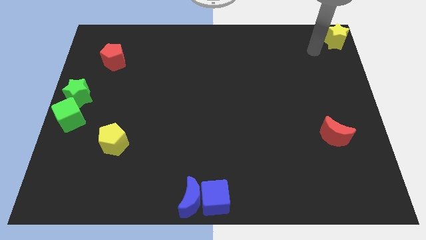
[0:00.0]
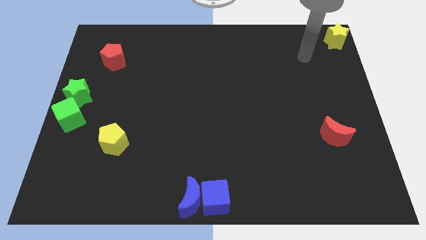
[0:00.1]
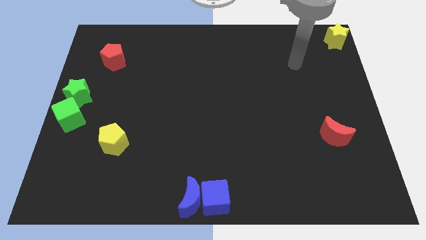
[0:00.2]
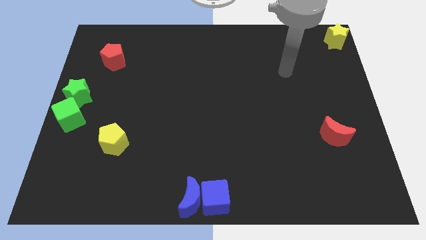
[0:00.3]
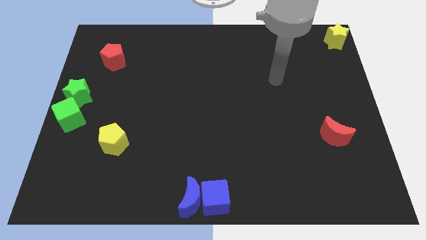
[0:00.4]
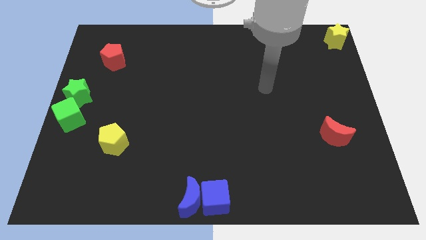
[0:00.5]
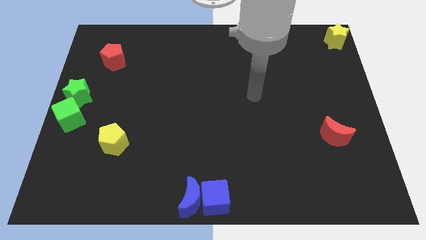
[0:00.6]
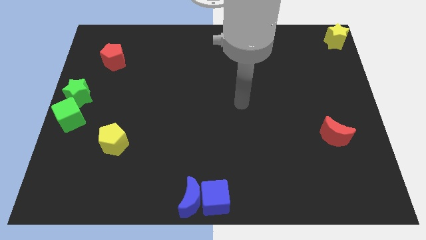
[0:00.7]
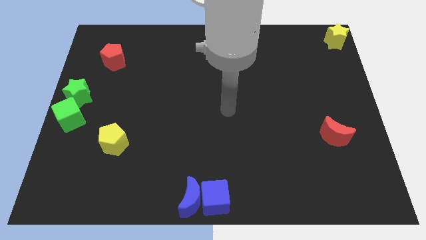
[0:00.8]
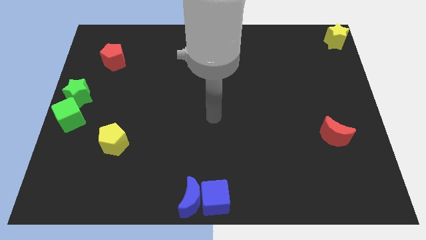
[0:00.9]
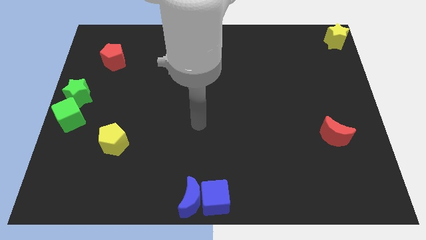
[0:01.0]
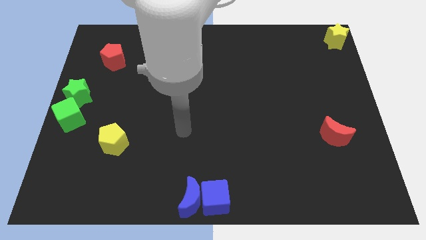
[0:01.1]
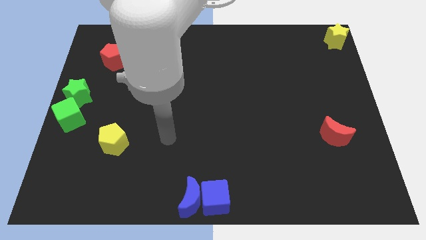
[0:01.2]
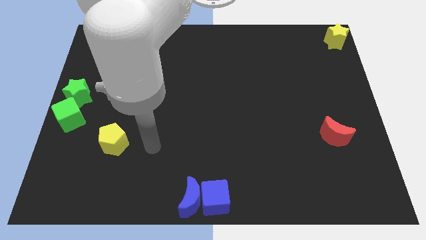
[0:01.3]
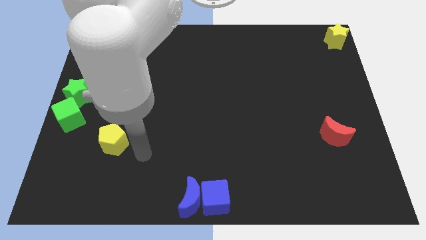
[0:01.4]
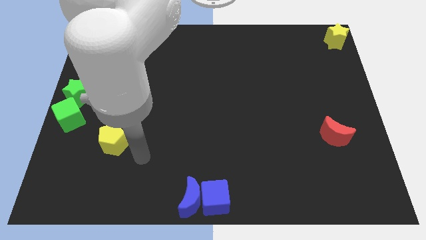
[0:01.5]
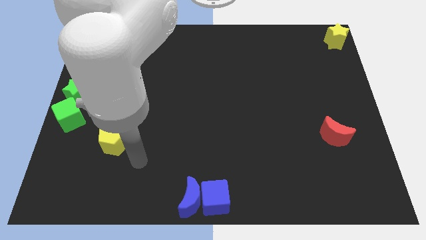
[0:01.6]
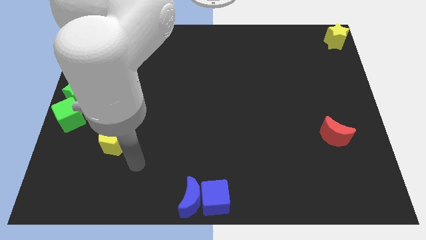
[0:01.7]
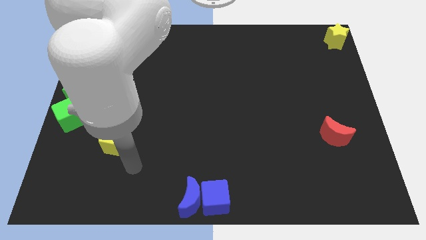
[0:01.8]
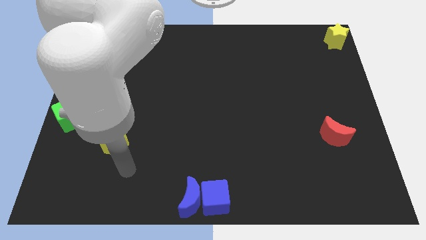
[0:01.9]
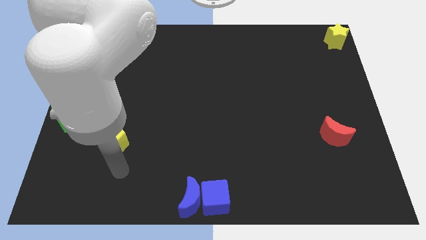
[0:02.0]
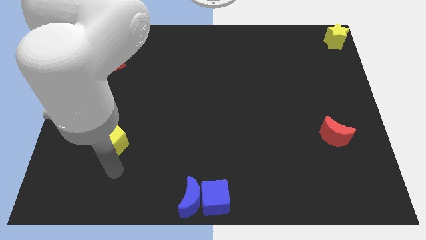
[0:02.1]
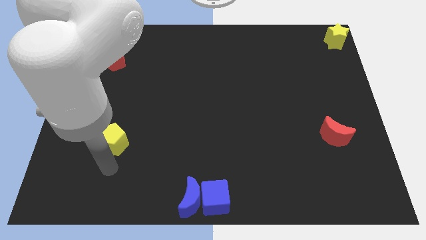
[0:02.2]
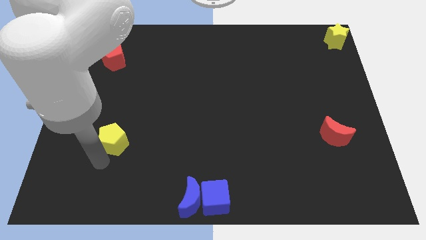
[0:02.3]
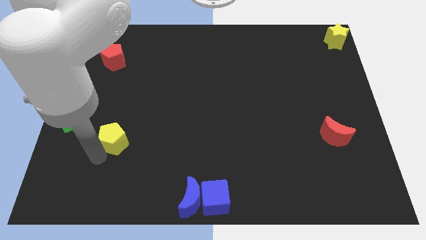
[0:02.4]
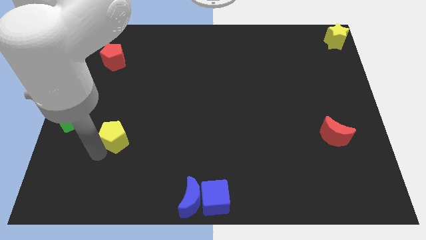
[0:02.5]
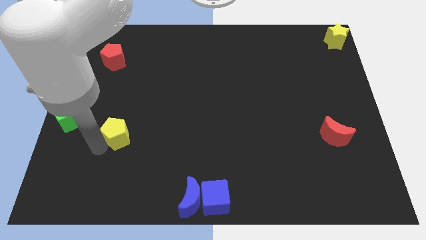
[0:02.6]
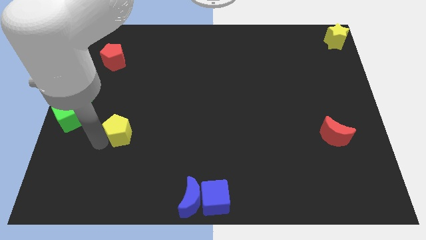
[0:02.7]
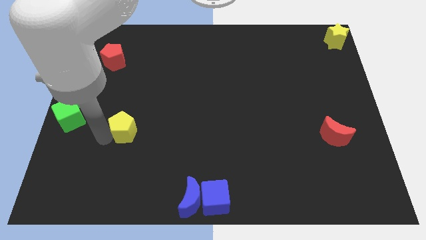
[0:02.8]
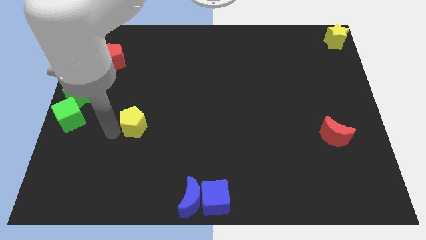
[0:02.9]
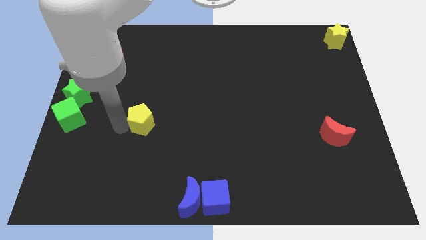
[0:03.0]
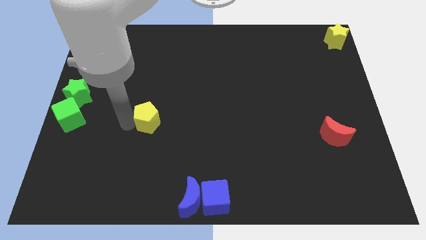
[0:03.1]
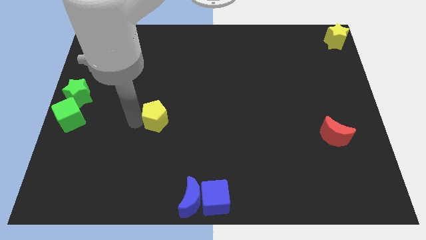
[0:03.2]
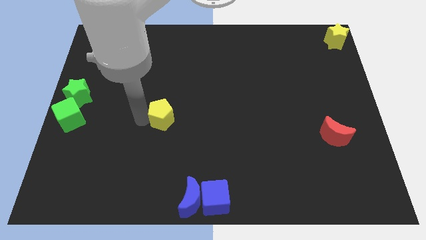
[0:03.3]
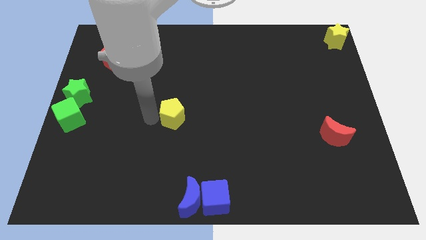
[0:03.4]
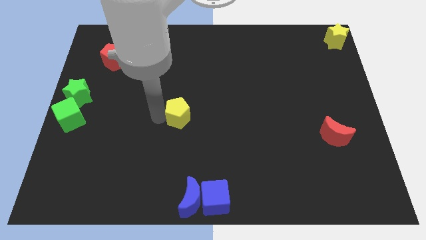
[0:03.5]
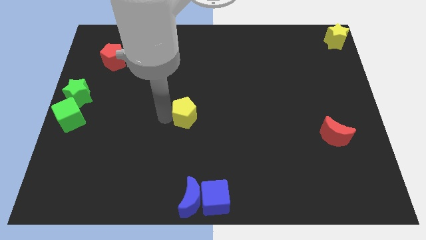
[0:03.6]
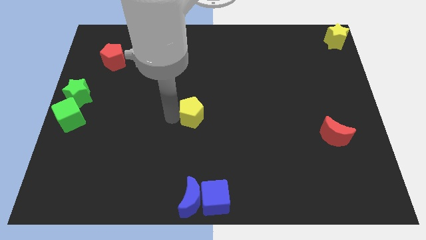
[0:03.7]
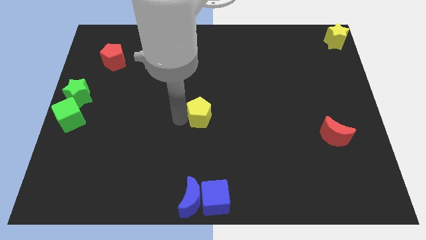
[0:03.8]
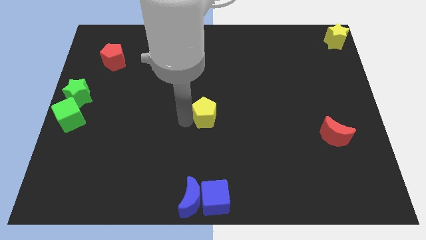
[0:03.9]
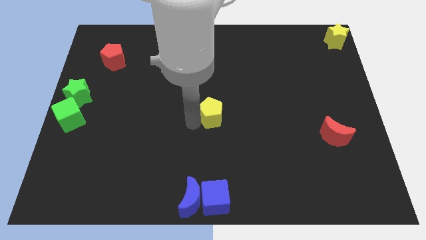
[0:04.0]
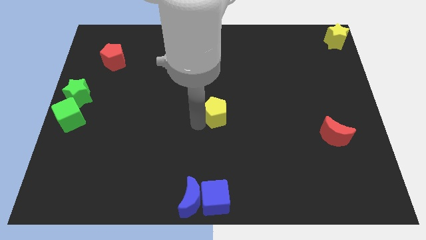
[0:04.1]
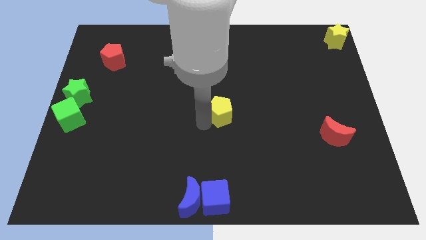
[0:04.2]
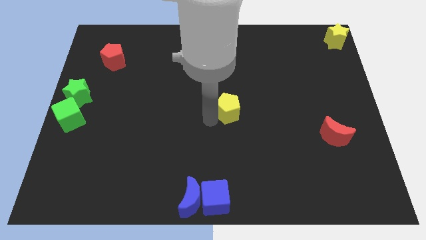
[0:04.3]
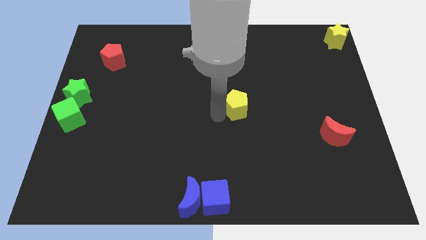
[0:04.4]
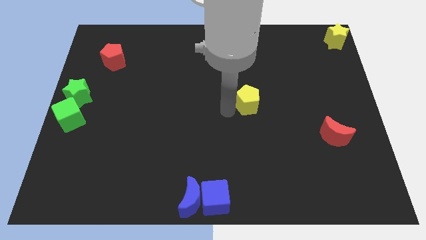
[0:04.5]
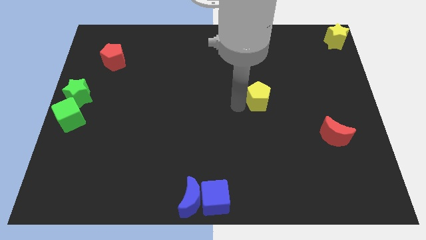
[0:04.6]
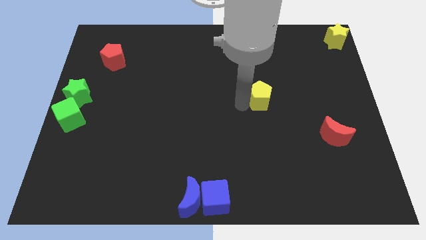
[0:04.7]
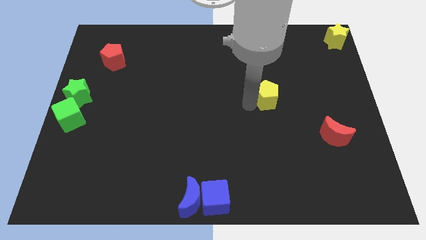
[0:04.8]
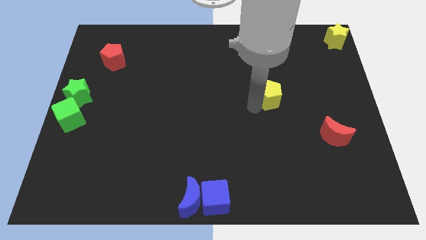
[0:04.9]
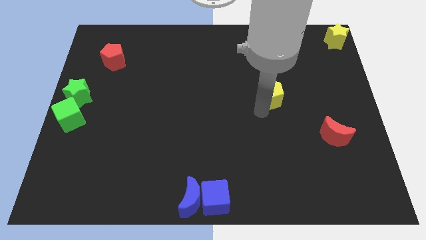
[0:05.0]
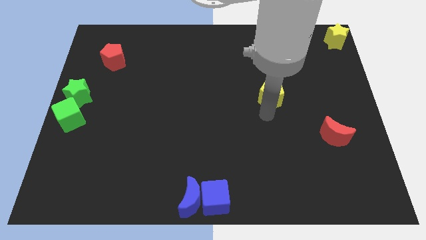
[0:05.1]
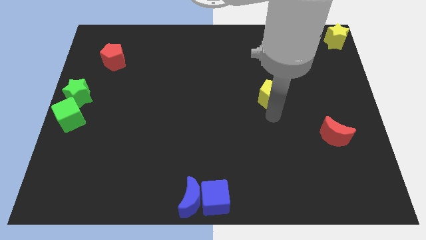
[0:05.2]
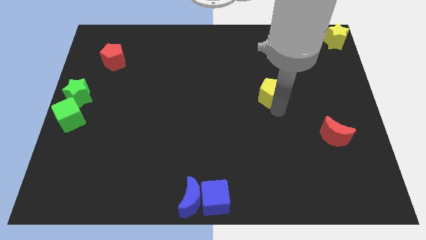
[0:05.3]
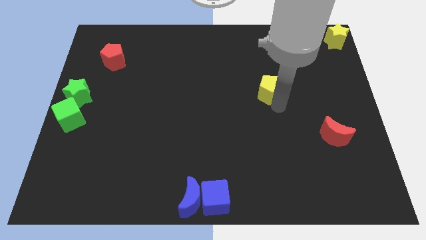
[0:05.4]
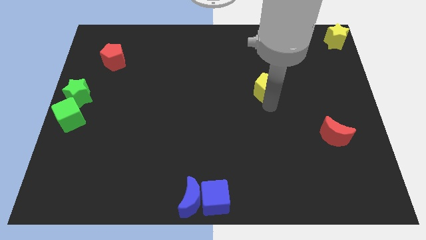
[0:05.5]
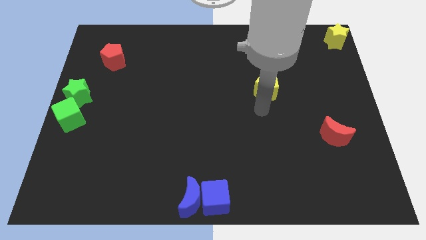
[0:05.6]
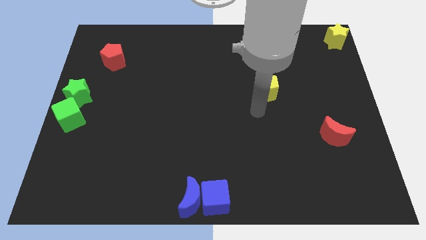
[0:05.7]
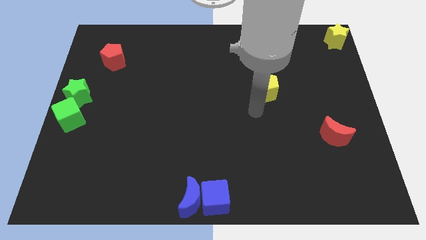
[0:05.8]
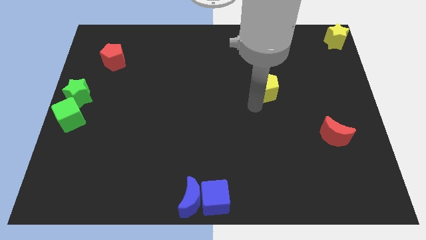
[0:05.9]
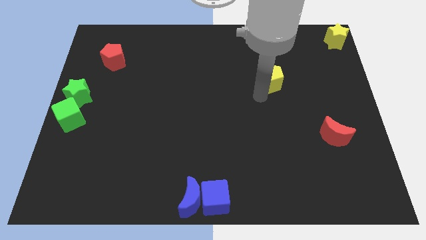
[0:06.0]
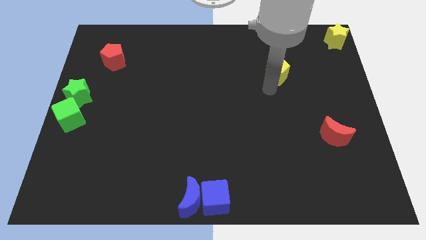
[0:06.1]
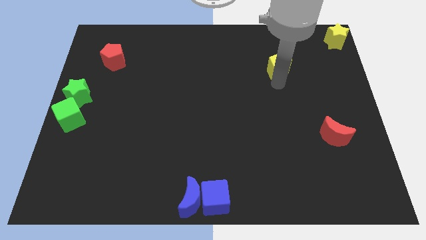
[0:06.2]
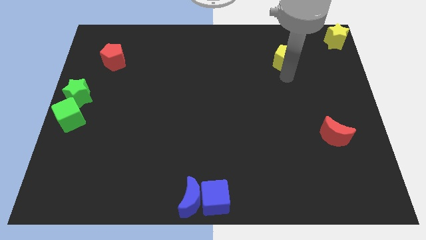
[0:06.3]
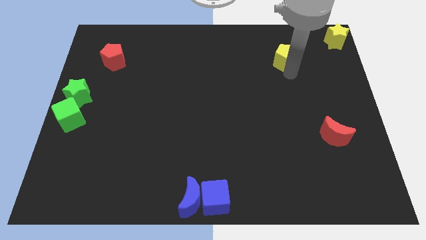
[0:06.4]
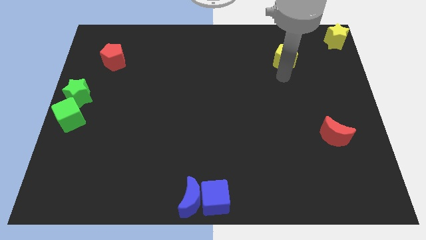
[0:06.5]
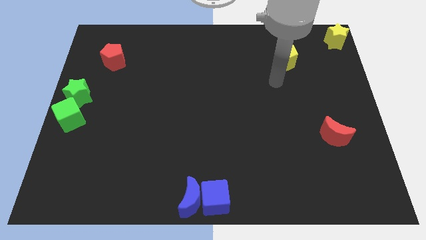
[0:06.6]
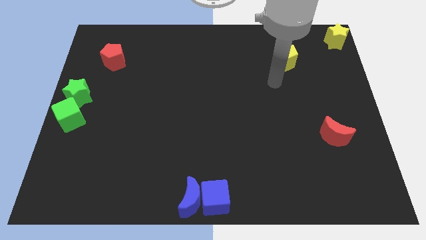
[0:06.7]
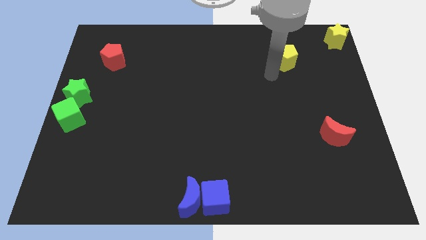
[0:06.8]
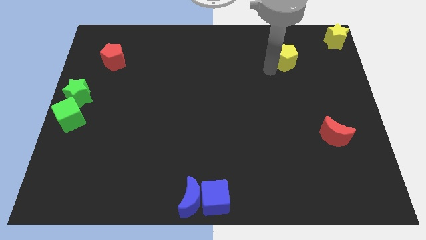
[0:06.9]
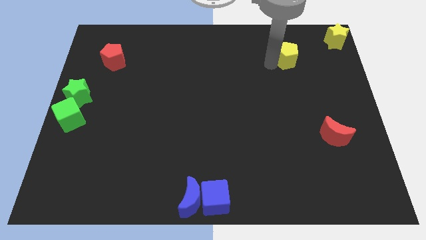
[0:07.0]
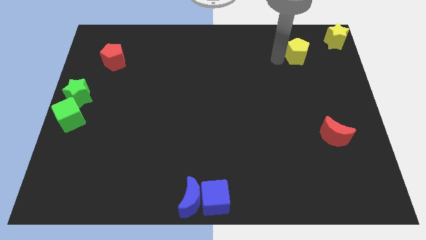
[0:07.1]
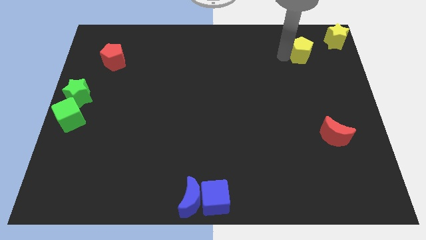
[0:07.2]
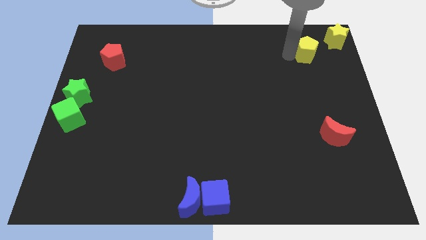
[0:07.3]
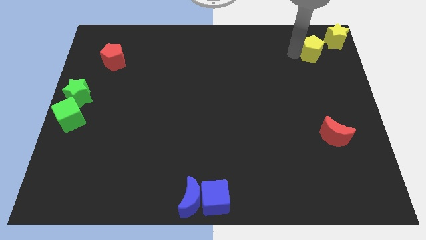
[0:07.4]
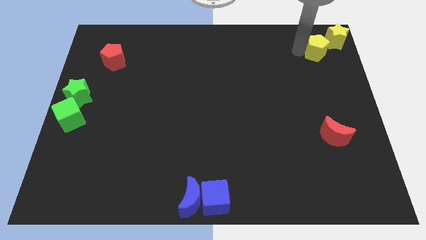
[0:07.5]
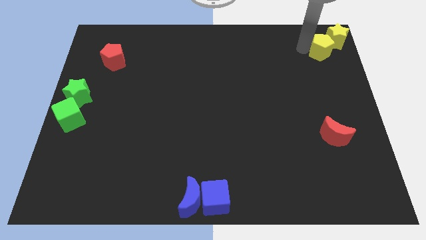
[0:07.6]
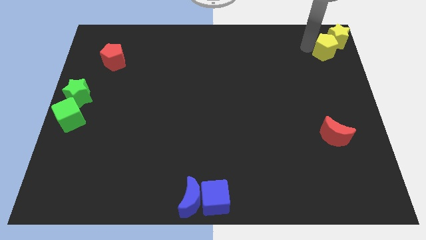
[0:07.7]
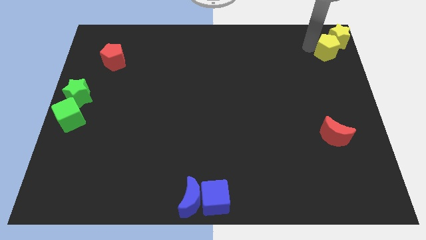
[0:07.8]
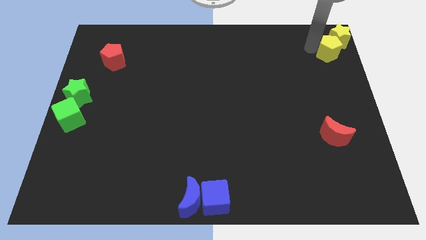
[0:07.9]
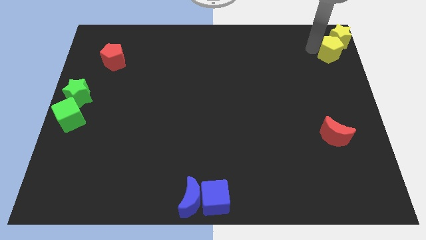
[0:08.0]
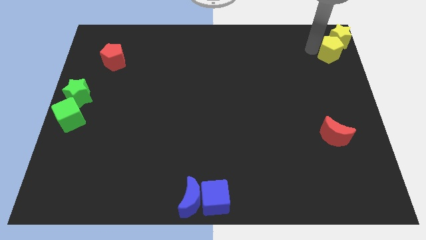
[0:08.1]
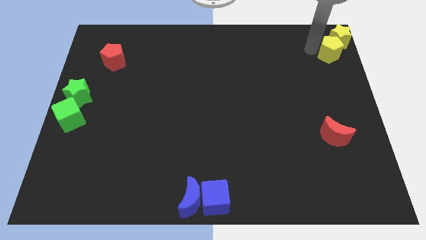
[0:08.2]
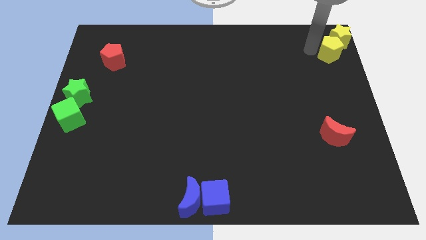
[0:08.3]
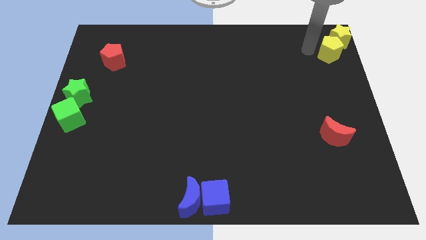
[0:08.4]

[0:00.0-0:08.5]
move yellow pentagon into the yellow star

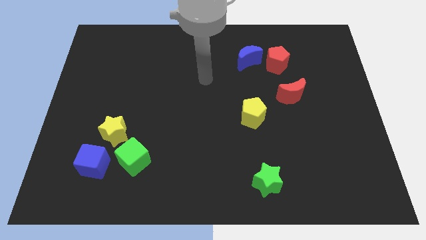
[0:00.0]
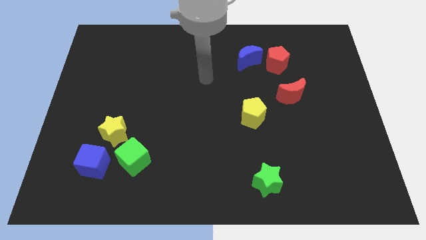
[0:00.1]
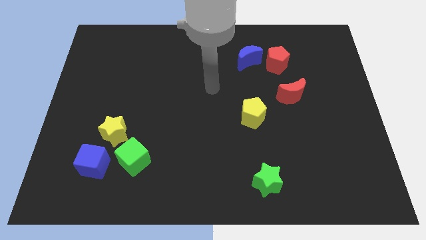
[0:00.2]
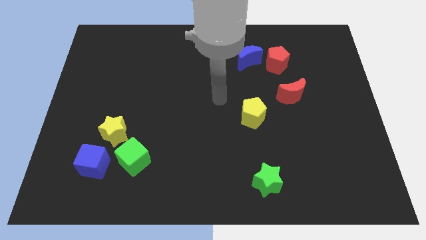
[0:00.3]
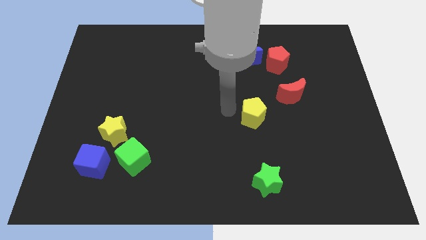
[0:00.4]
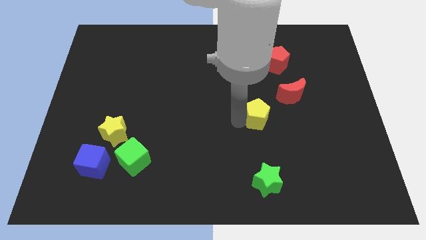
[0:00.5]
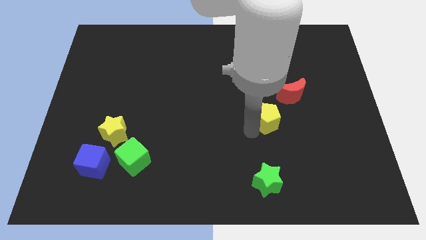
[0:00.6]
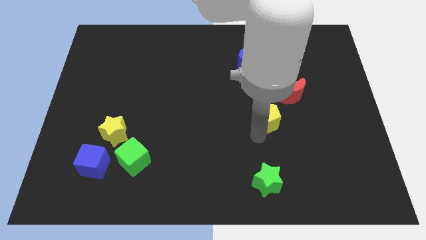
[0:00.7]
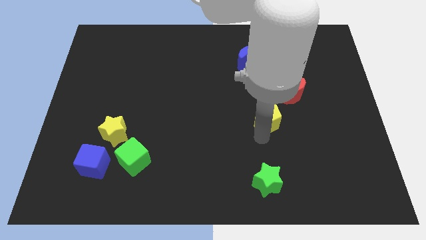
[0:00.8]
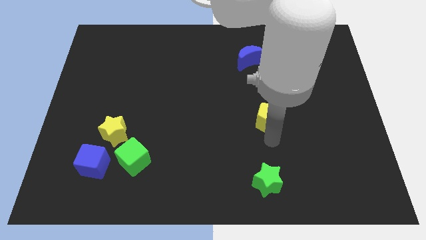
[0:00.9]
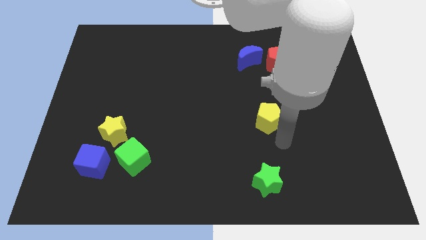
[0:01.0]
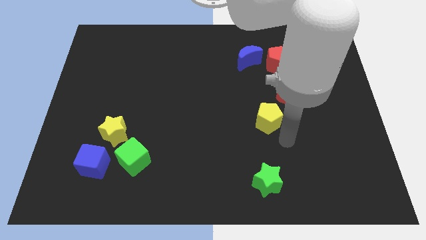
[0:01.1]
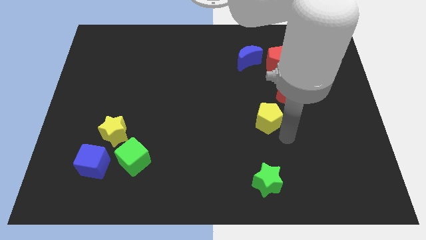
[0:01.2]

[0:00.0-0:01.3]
slide the yellow pentagon slightly to the right
